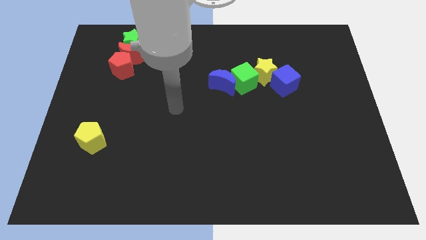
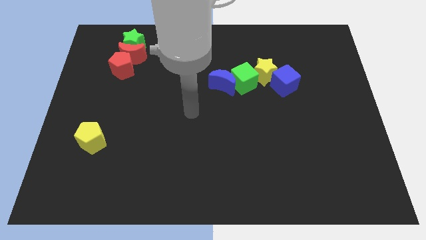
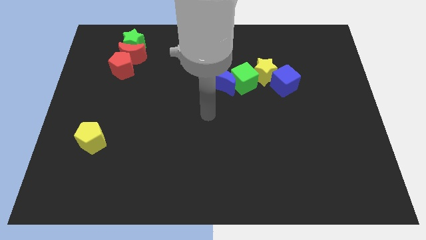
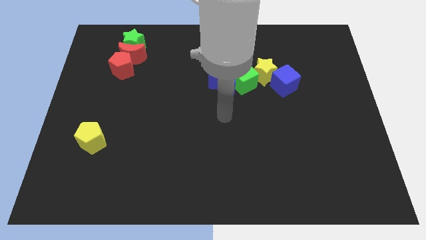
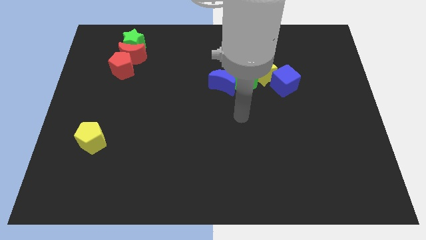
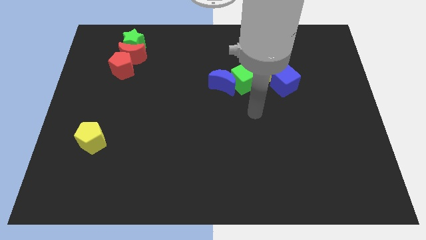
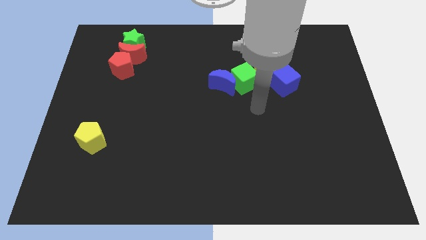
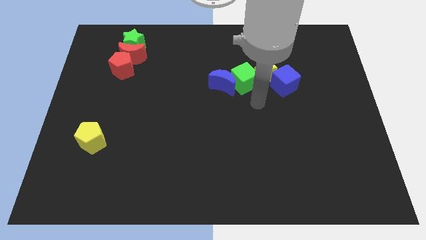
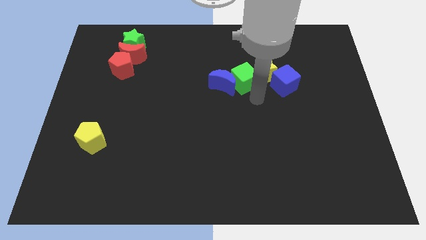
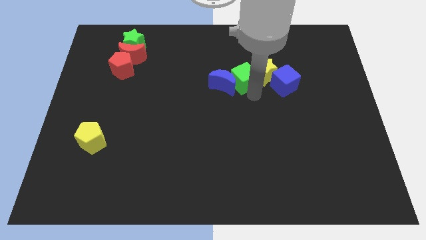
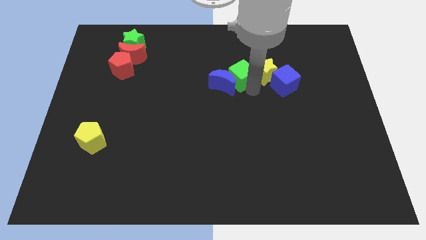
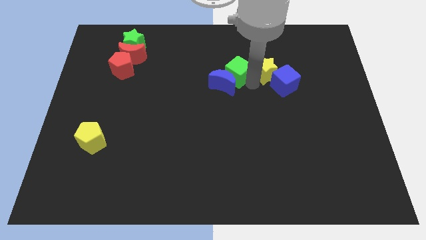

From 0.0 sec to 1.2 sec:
place your arm to the bottom of green cube

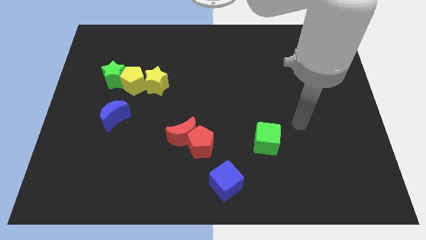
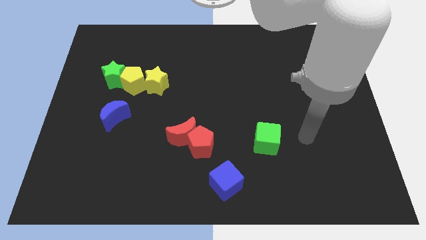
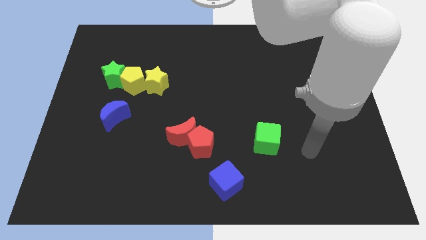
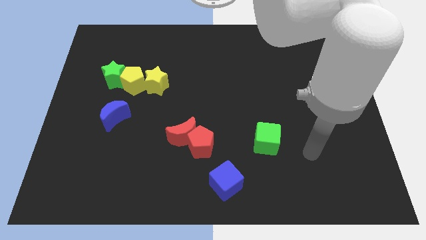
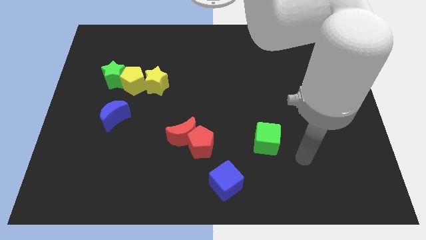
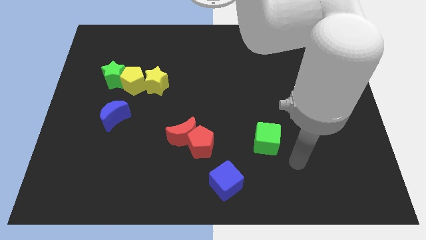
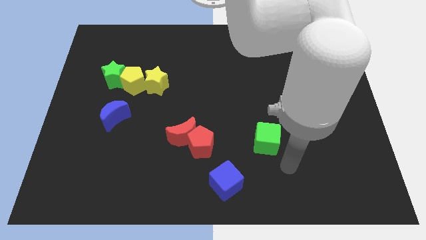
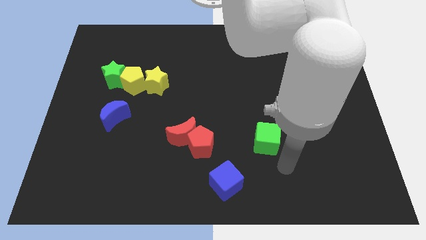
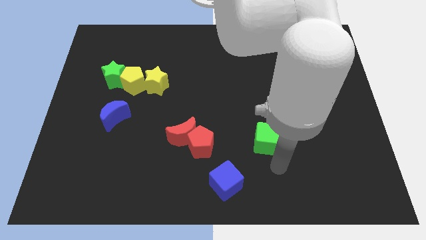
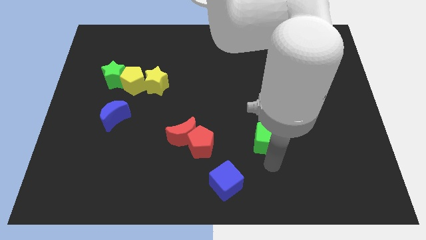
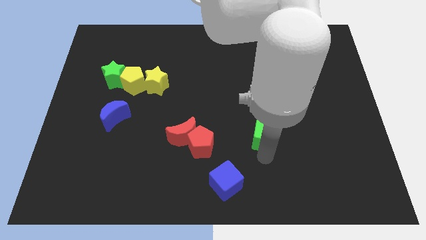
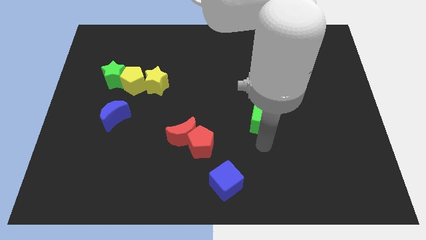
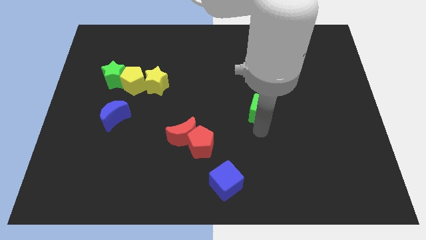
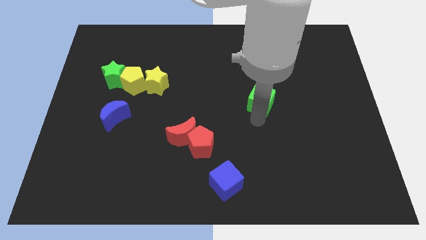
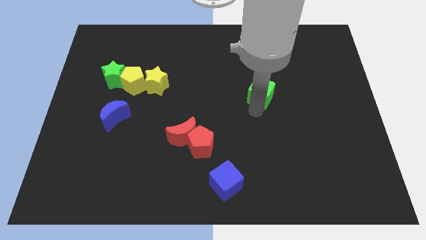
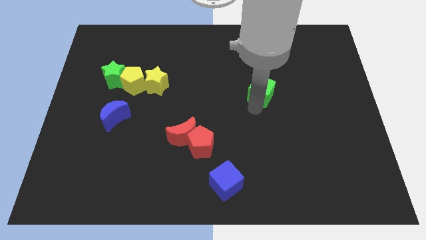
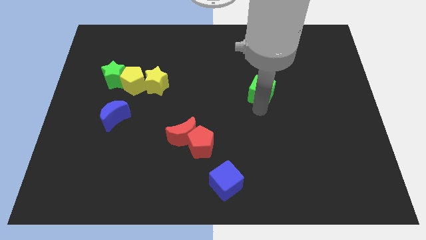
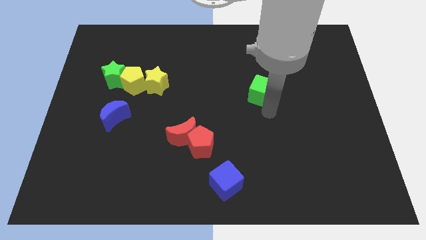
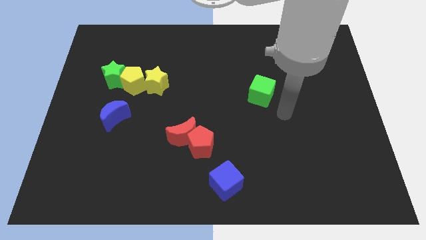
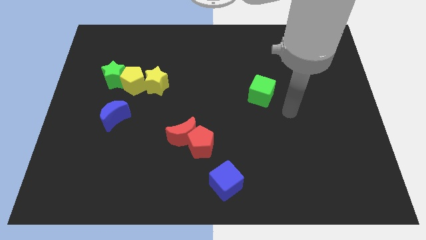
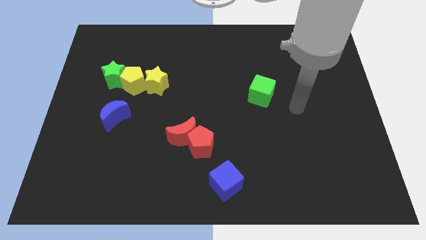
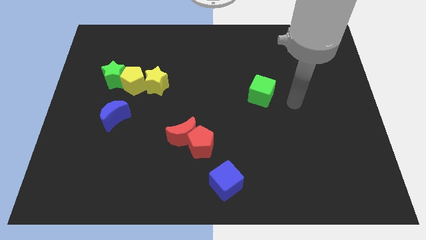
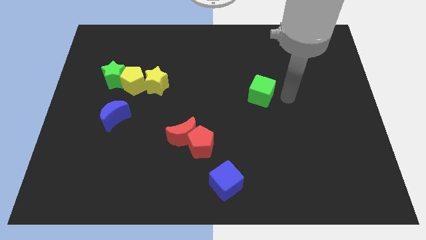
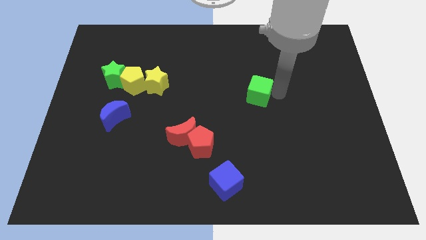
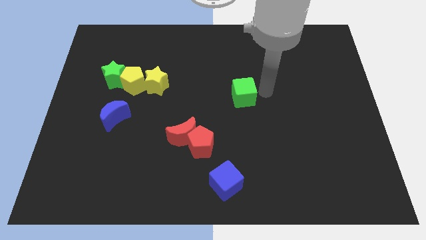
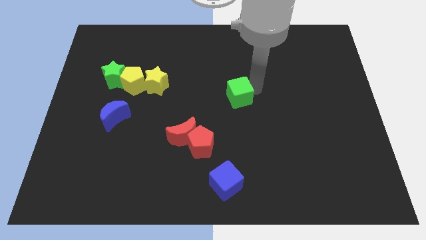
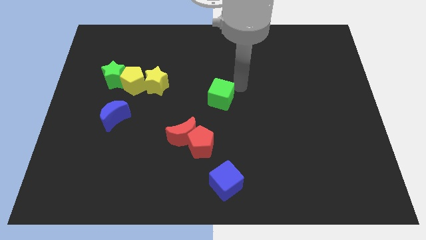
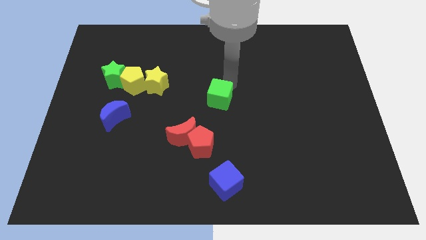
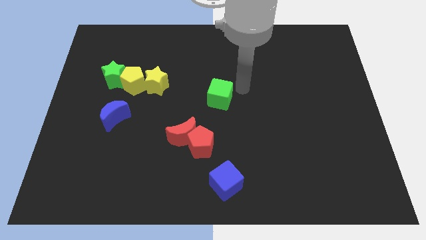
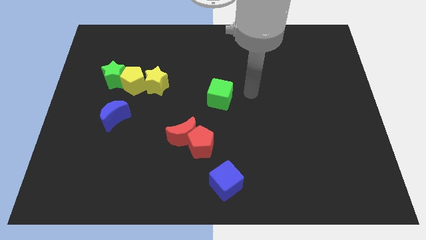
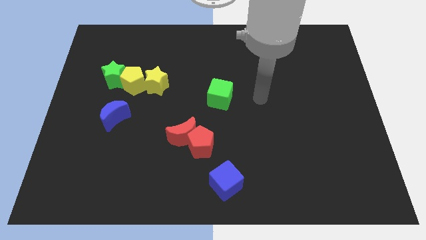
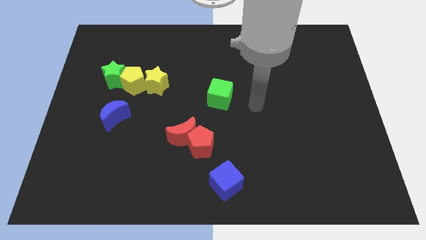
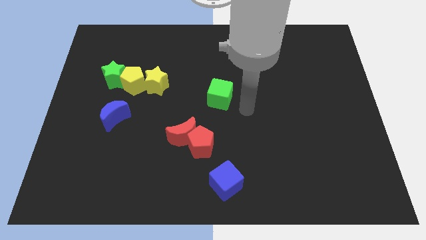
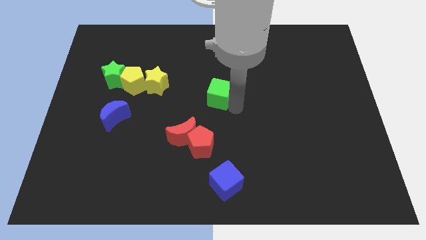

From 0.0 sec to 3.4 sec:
place the green cube at the center of the board

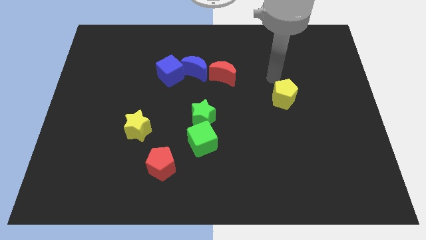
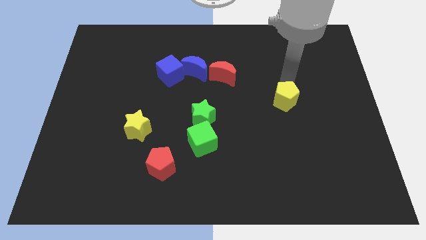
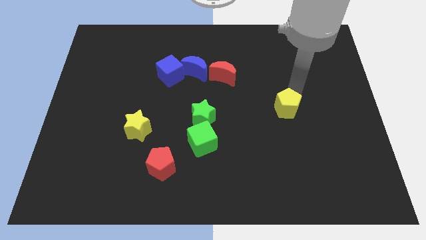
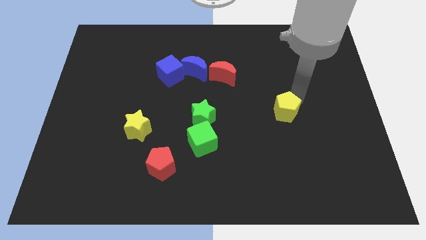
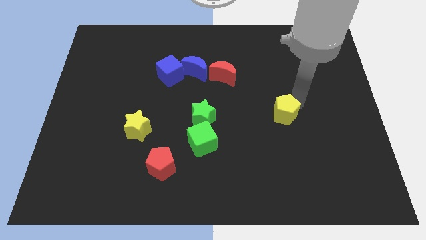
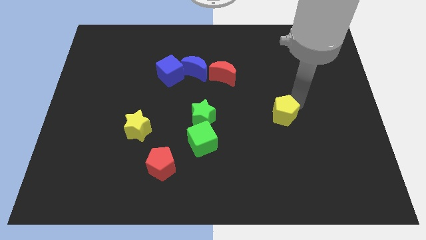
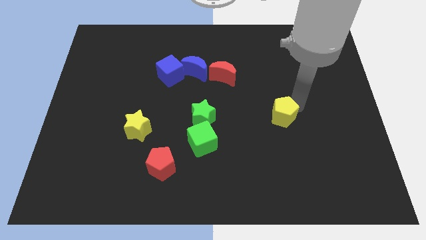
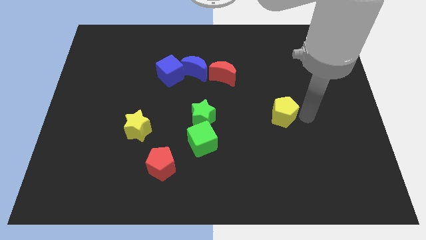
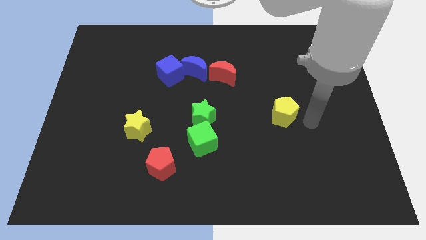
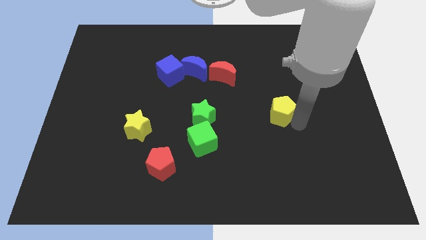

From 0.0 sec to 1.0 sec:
put the yellow pentagon to the right of the green star

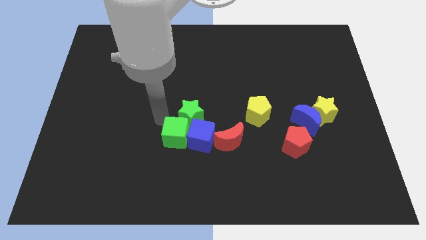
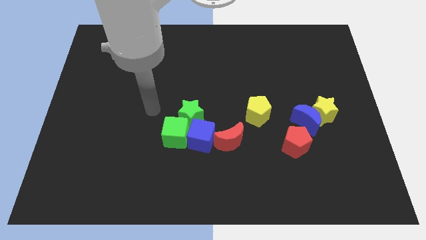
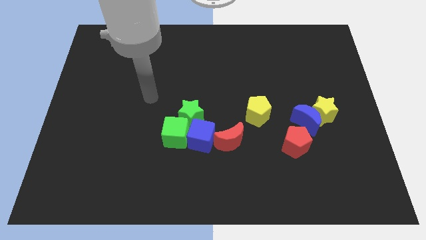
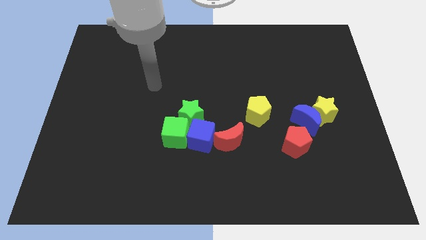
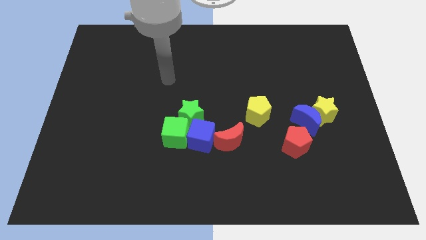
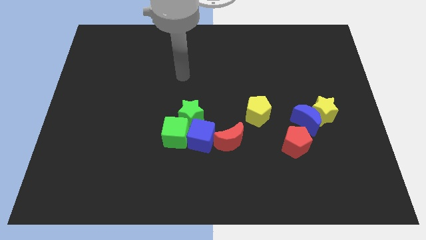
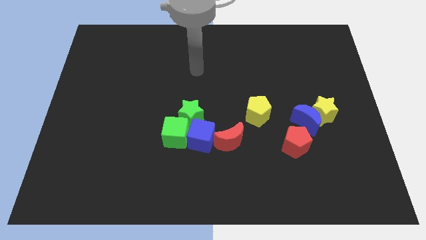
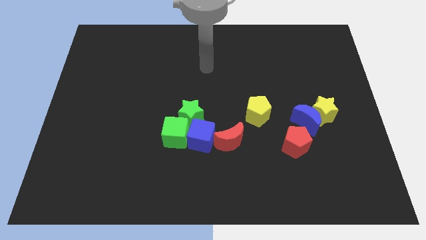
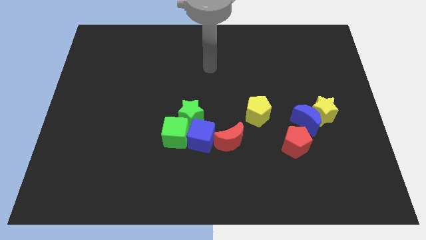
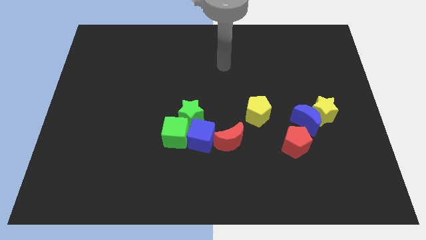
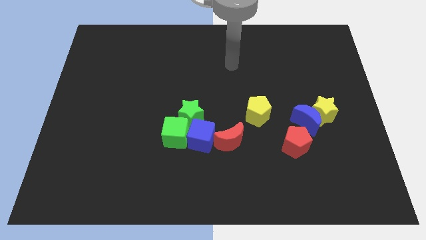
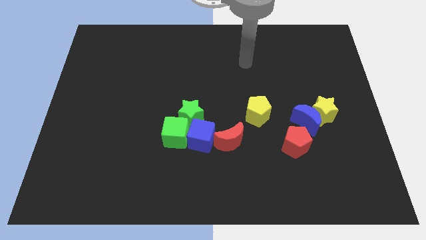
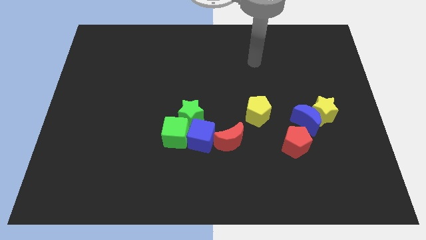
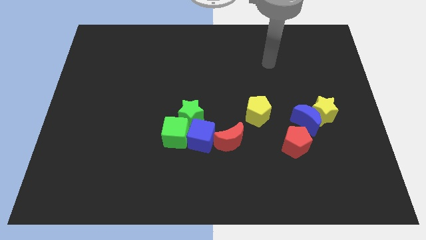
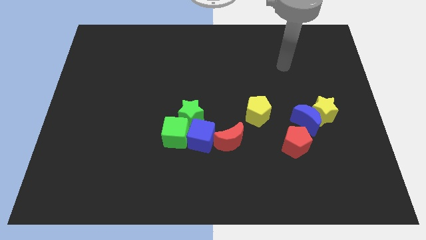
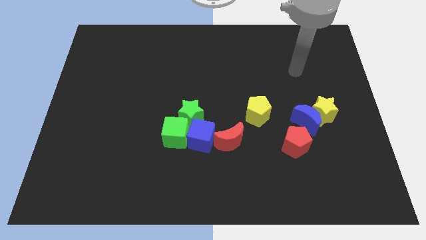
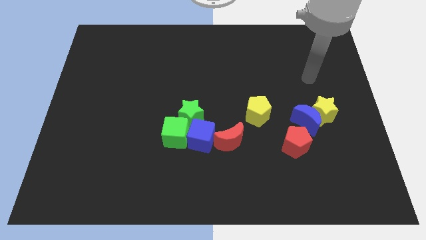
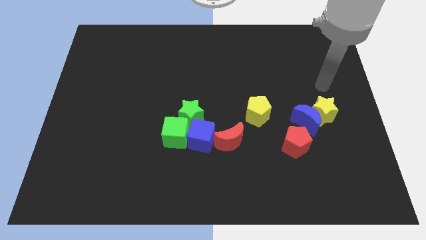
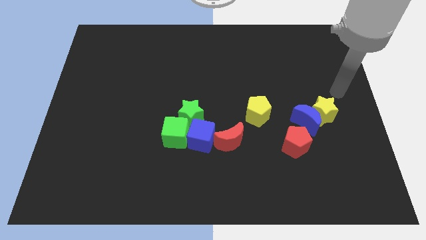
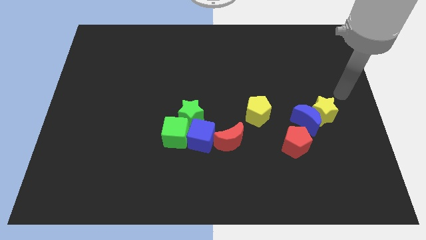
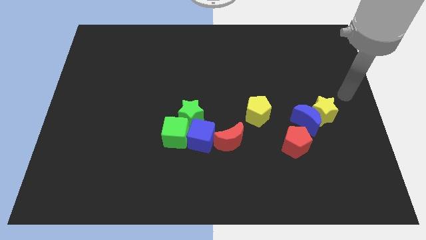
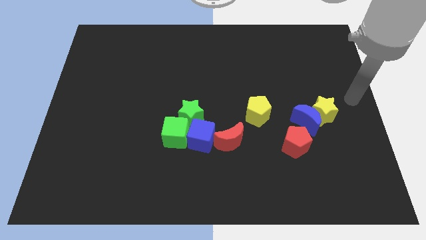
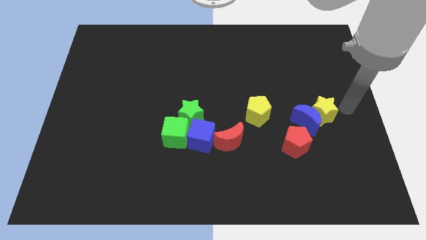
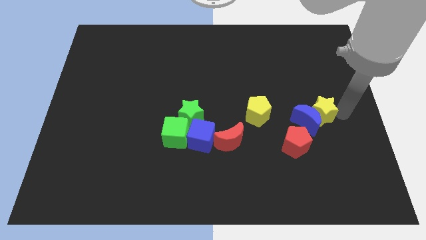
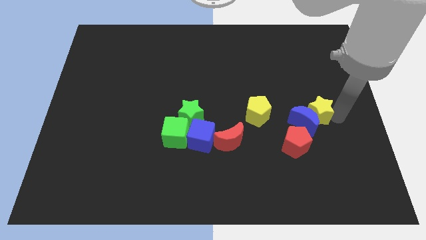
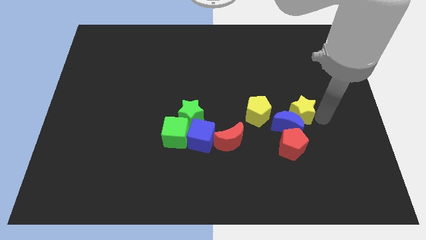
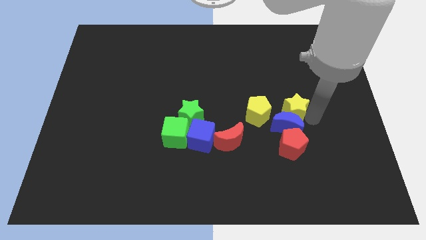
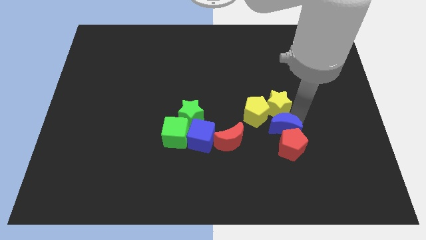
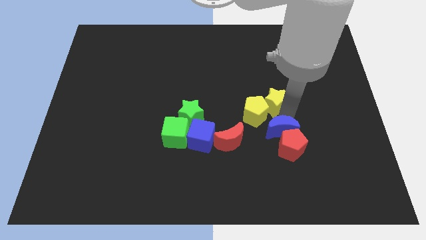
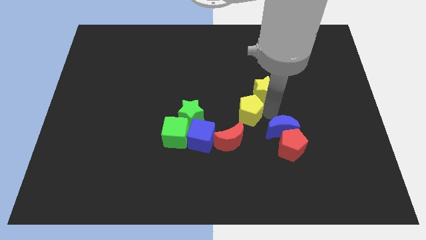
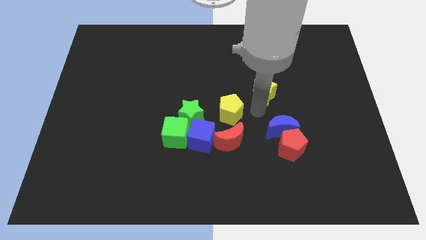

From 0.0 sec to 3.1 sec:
slide yellow star towards yellow pentagon

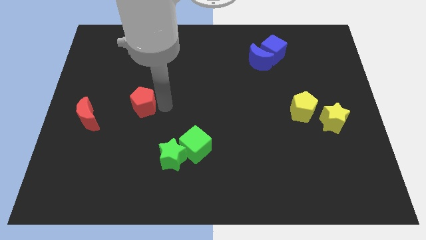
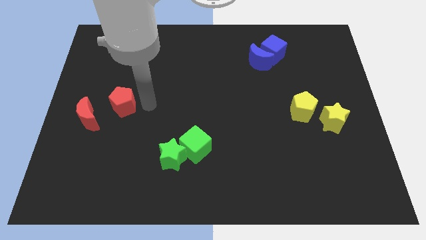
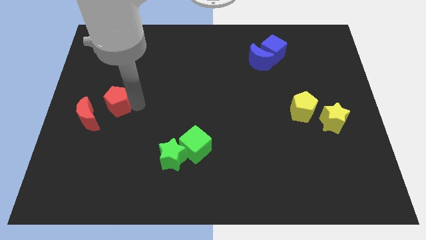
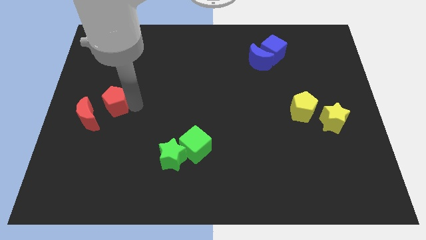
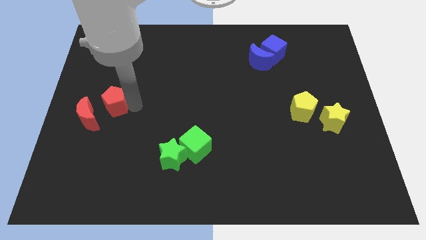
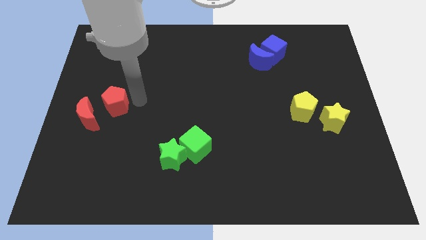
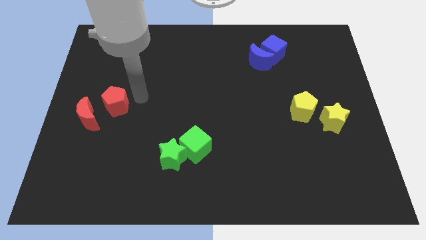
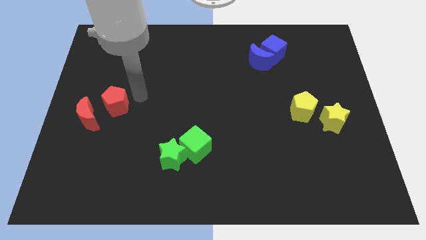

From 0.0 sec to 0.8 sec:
push the red penatgon towards the right side of the red crescent
